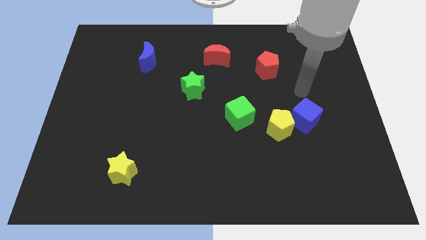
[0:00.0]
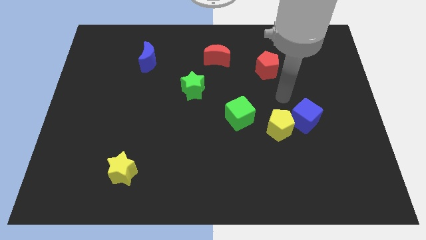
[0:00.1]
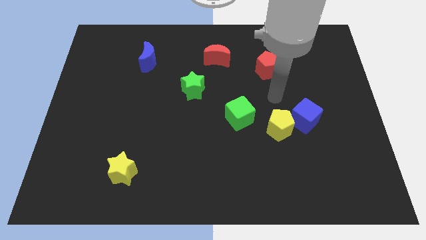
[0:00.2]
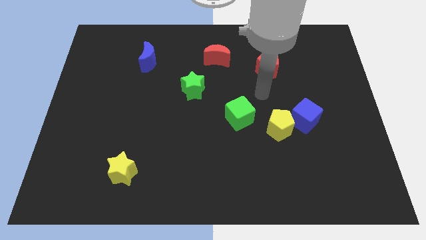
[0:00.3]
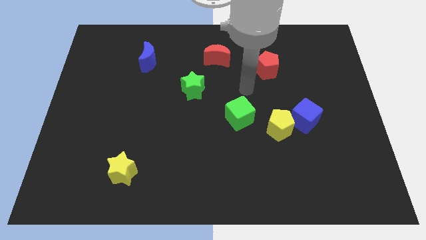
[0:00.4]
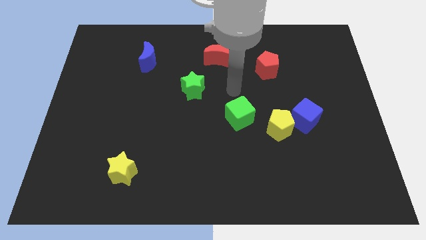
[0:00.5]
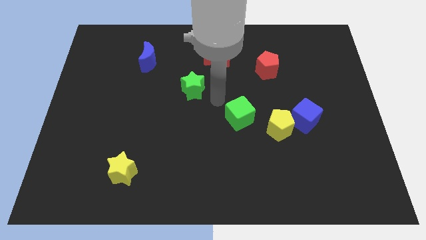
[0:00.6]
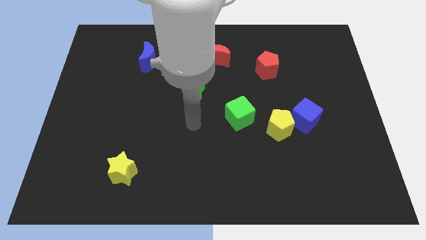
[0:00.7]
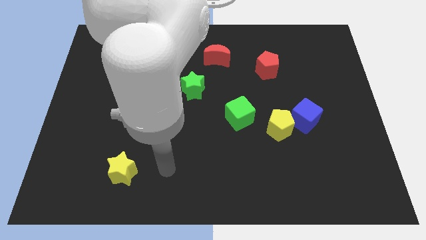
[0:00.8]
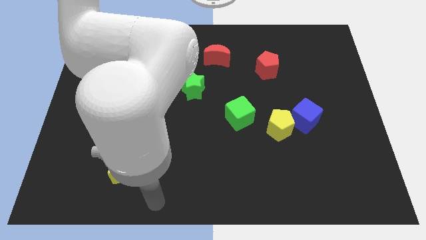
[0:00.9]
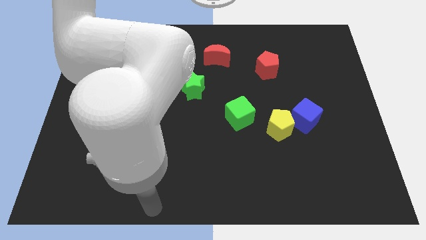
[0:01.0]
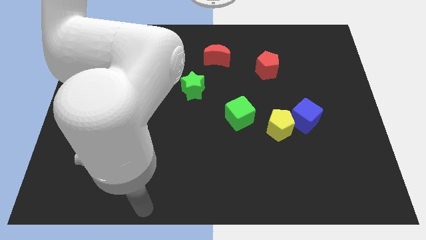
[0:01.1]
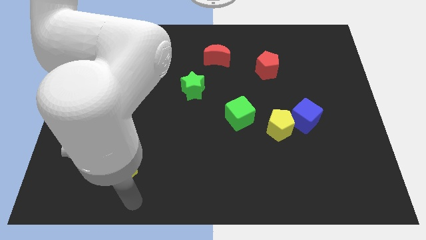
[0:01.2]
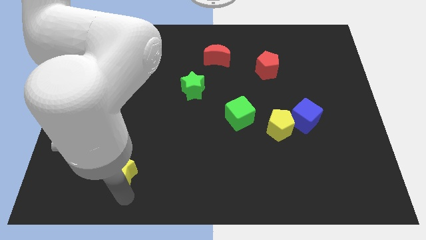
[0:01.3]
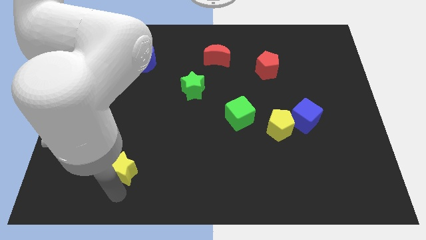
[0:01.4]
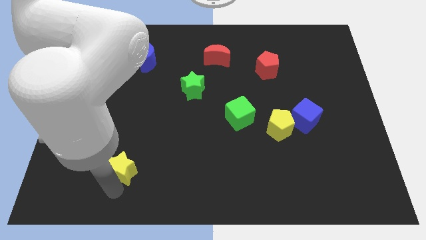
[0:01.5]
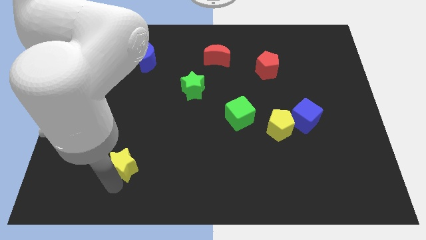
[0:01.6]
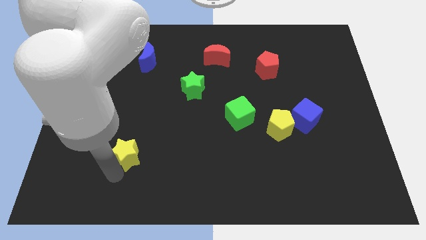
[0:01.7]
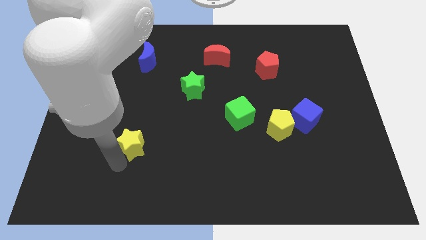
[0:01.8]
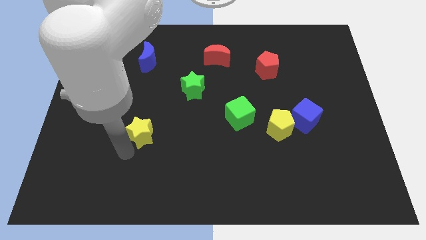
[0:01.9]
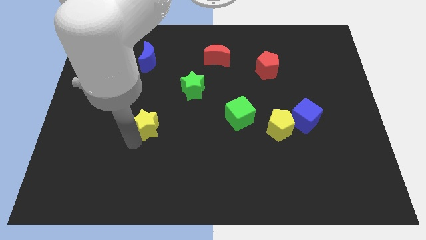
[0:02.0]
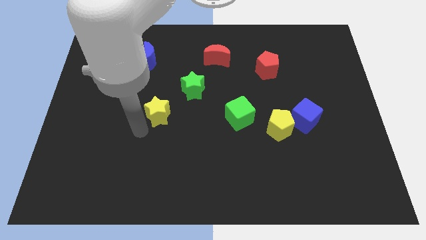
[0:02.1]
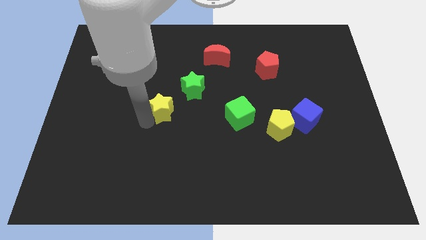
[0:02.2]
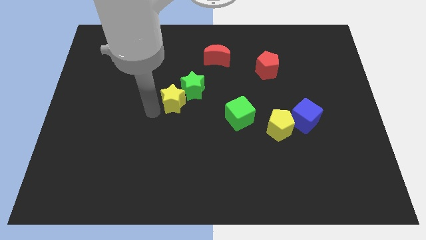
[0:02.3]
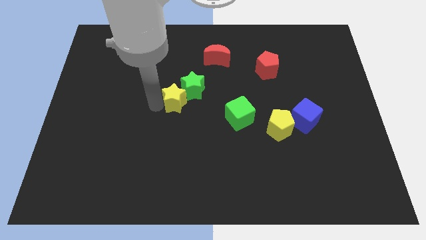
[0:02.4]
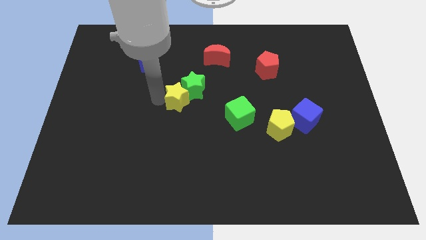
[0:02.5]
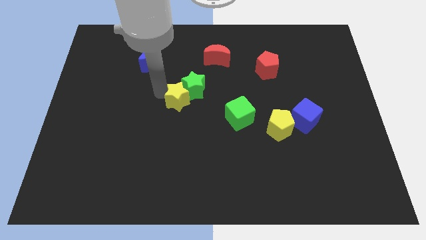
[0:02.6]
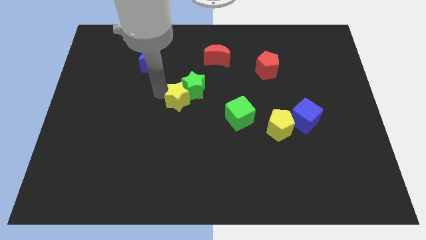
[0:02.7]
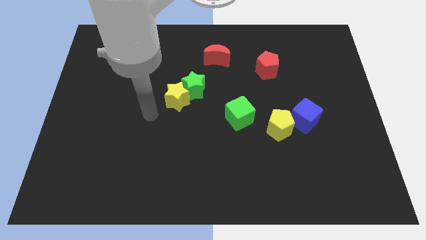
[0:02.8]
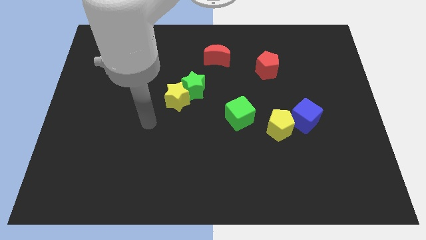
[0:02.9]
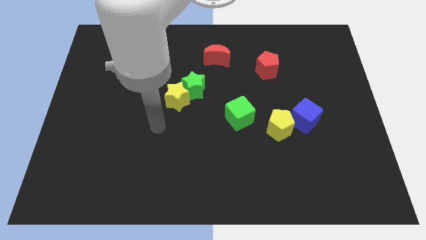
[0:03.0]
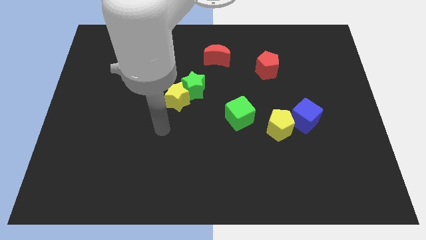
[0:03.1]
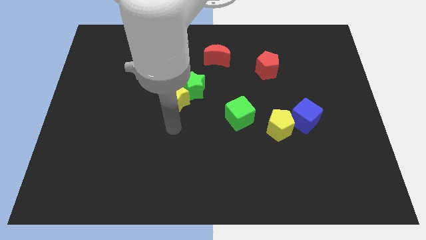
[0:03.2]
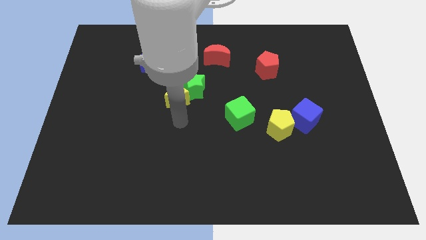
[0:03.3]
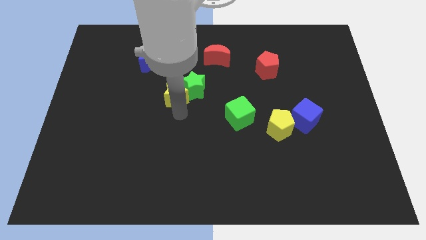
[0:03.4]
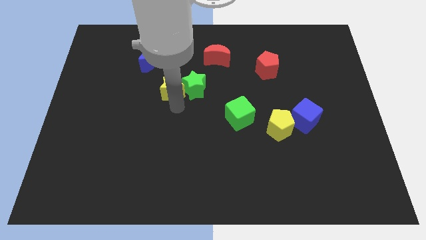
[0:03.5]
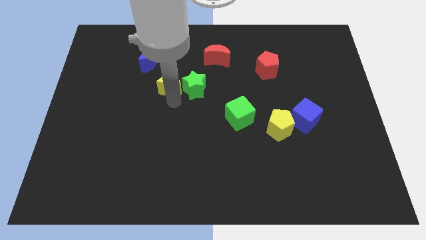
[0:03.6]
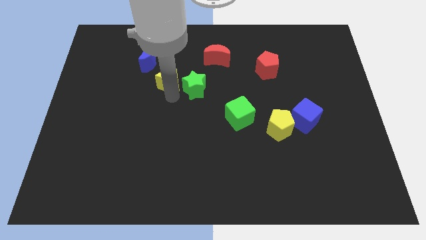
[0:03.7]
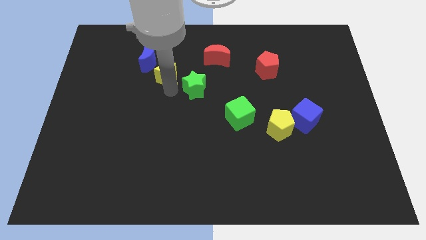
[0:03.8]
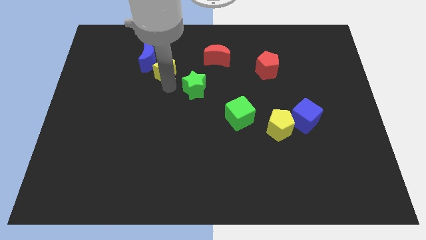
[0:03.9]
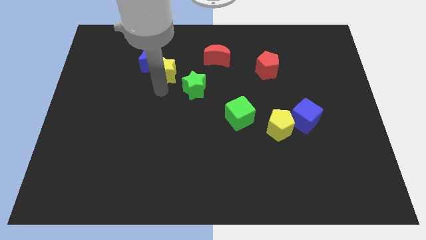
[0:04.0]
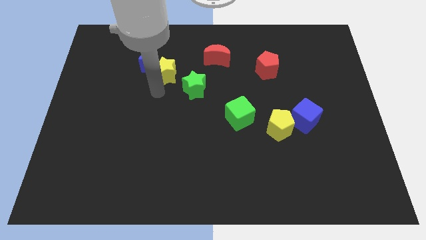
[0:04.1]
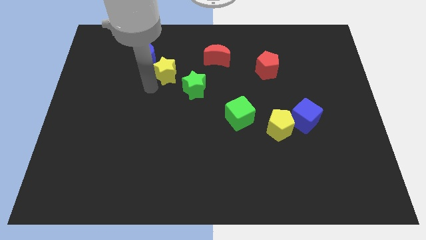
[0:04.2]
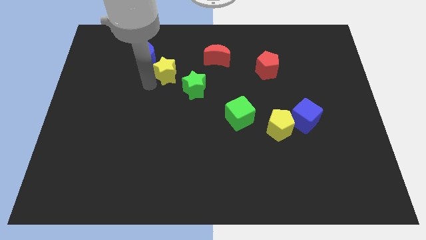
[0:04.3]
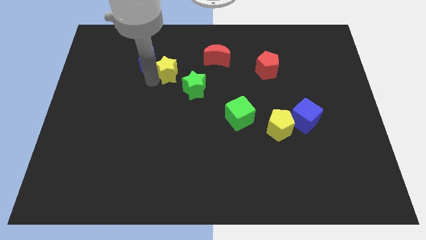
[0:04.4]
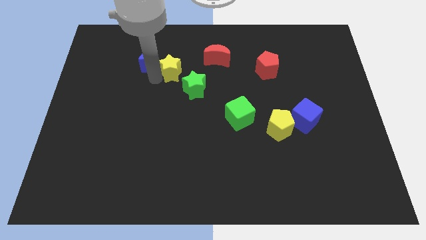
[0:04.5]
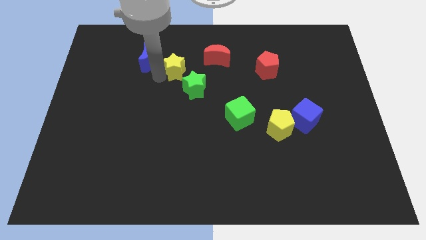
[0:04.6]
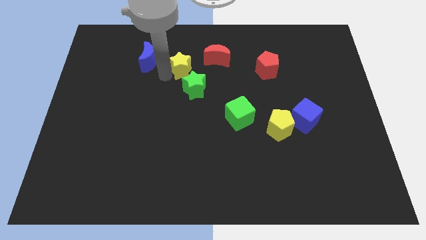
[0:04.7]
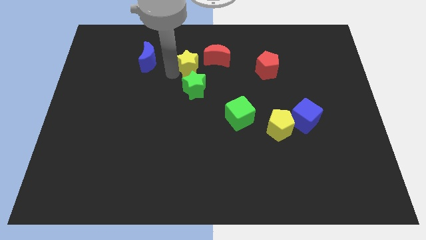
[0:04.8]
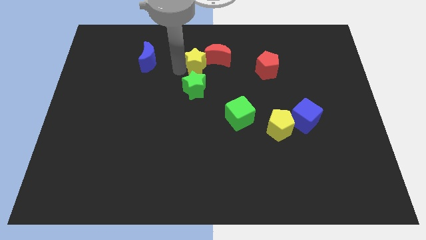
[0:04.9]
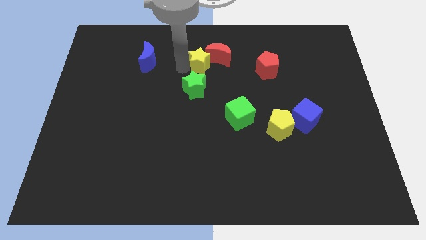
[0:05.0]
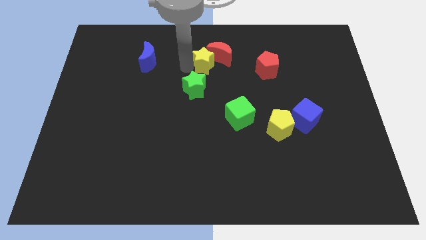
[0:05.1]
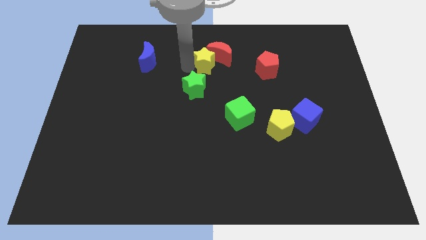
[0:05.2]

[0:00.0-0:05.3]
slide the yellow star towards the red moon

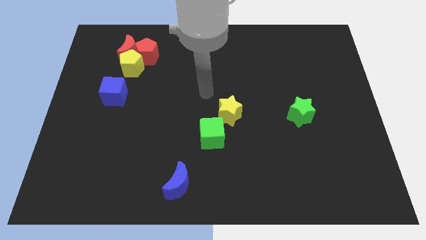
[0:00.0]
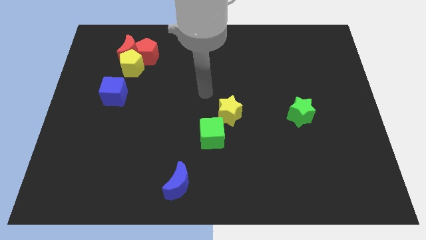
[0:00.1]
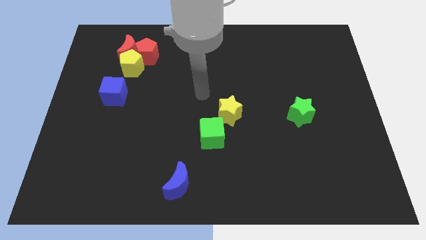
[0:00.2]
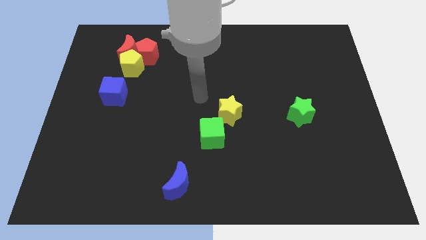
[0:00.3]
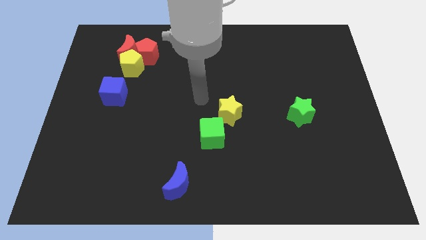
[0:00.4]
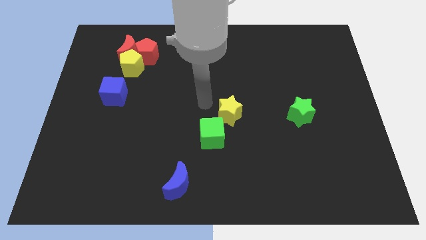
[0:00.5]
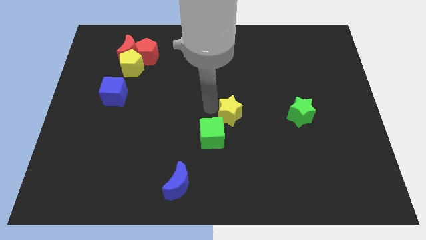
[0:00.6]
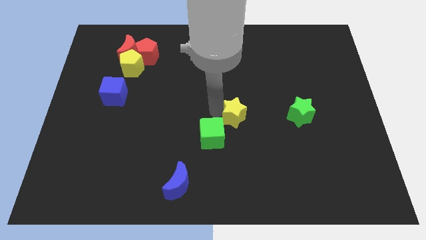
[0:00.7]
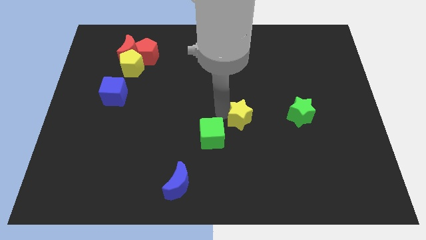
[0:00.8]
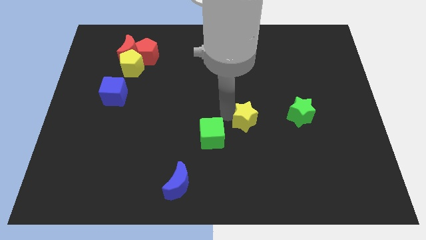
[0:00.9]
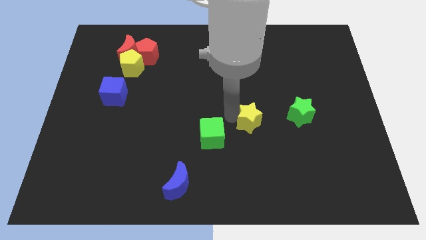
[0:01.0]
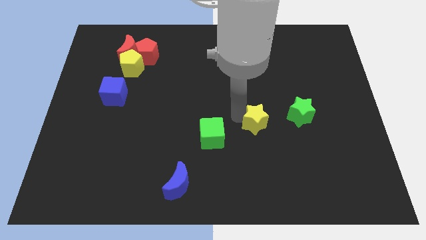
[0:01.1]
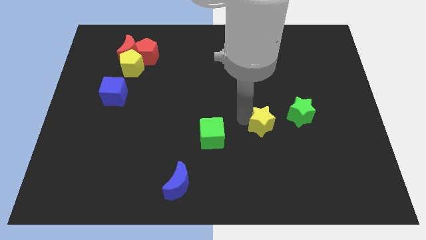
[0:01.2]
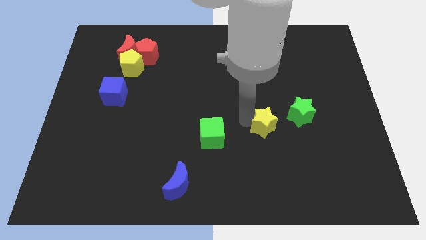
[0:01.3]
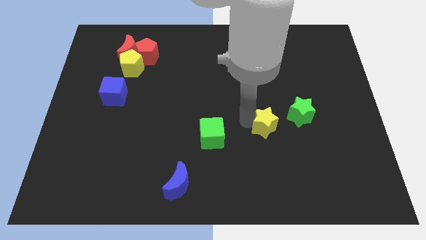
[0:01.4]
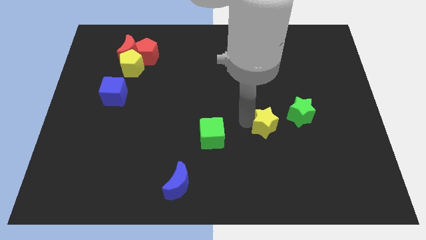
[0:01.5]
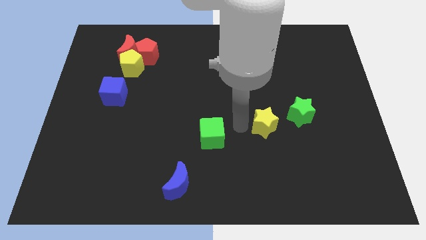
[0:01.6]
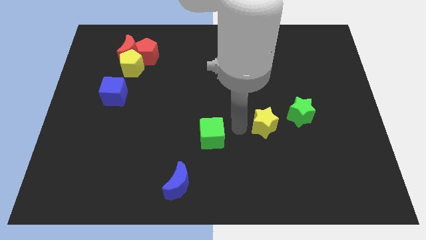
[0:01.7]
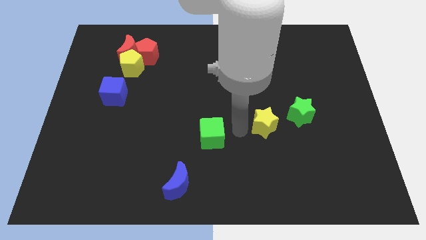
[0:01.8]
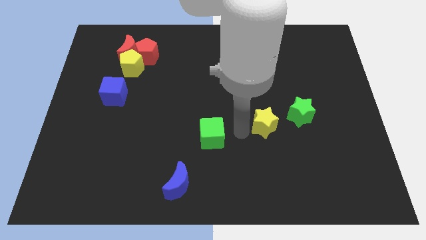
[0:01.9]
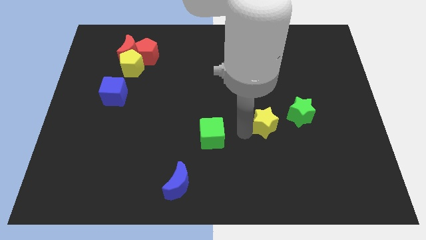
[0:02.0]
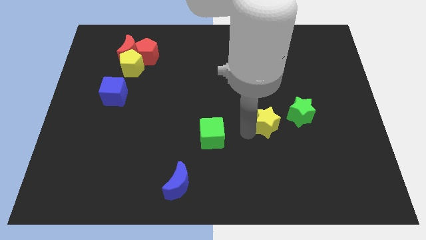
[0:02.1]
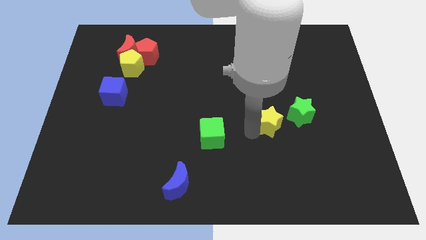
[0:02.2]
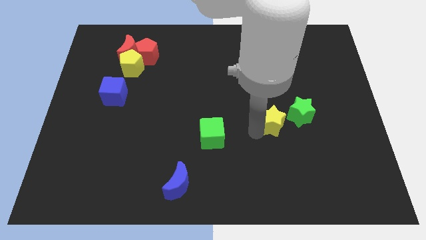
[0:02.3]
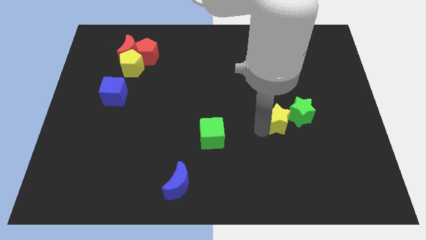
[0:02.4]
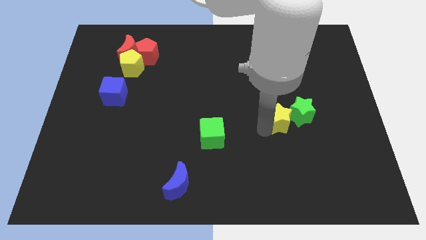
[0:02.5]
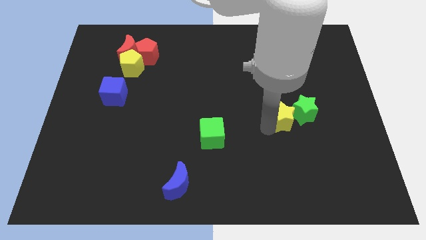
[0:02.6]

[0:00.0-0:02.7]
move the yellow star towards the green star

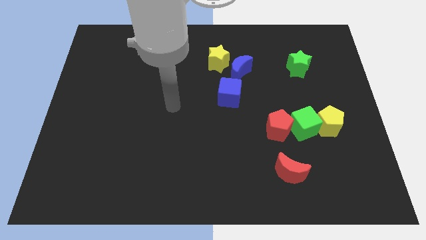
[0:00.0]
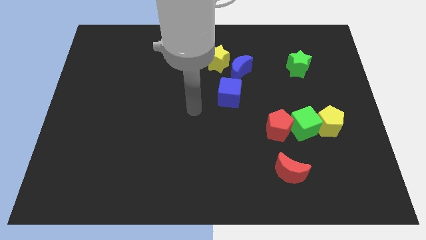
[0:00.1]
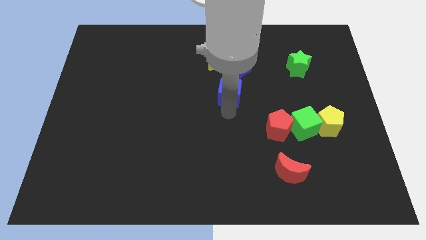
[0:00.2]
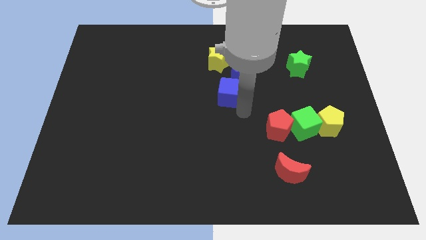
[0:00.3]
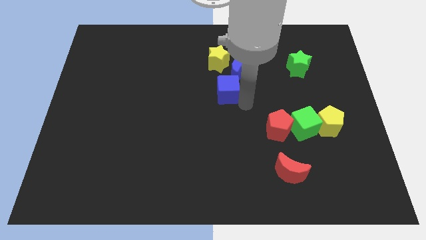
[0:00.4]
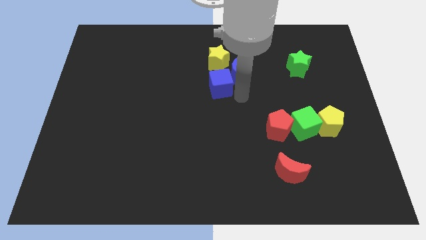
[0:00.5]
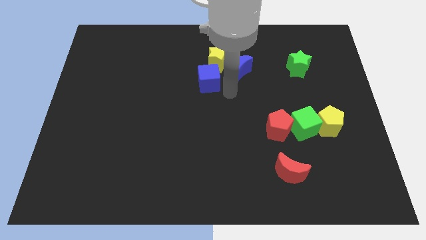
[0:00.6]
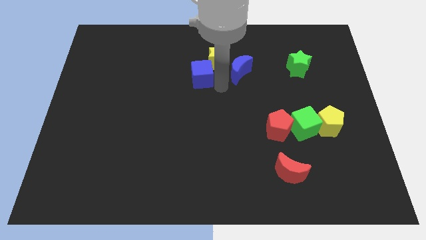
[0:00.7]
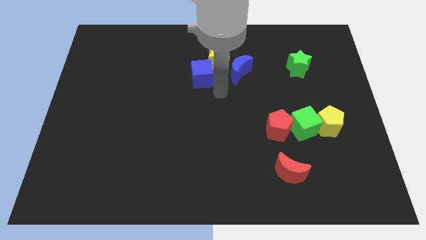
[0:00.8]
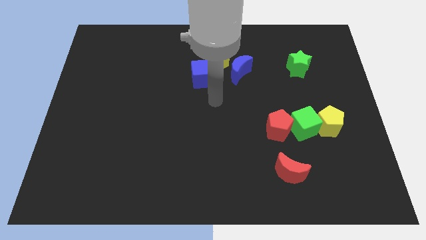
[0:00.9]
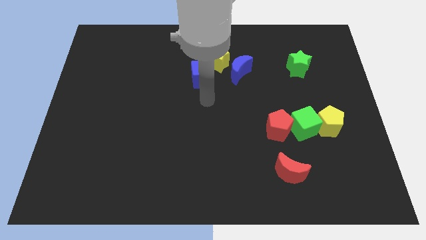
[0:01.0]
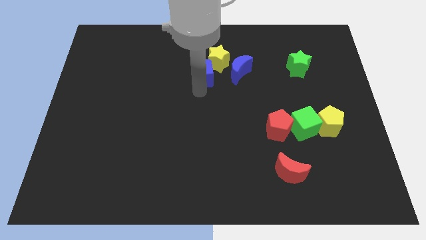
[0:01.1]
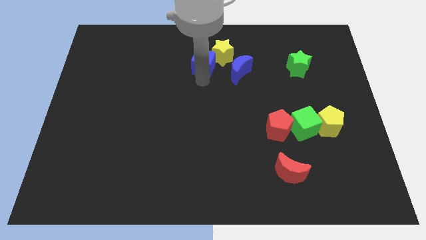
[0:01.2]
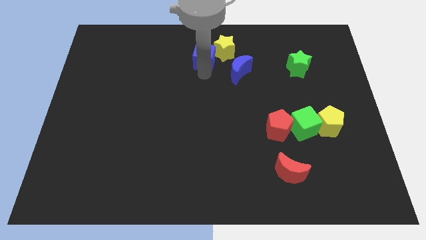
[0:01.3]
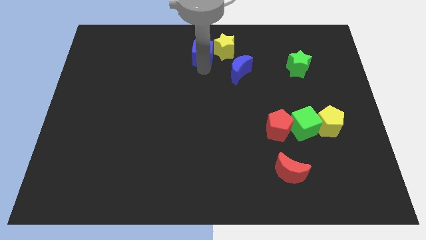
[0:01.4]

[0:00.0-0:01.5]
push the blue cube close to the yellow star
